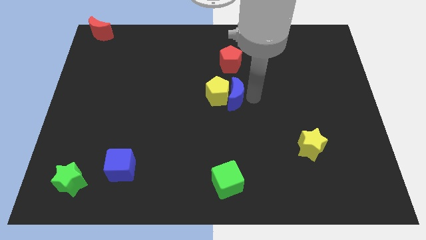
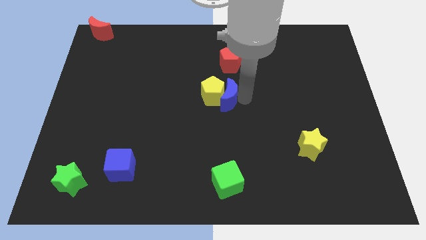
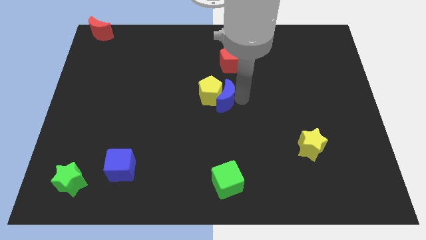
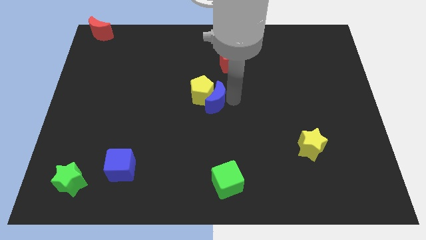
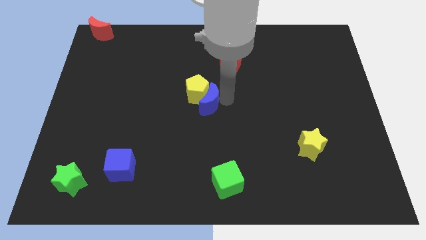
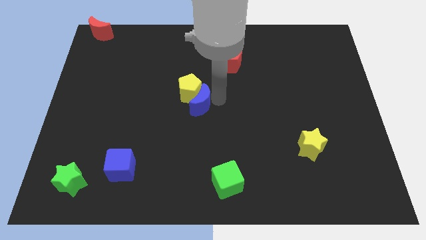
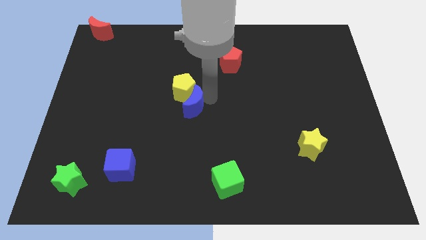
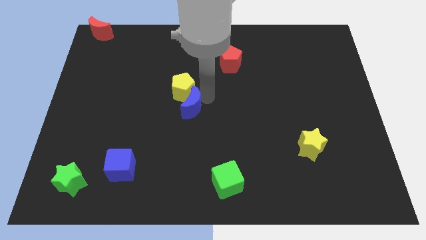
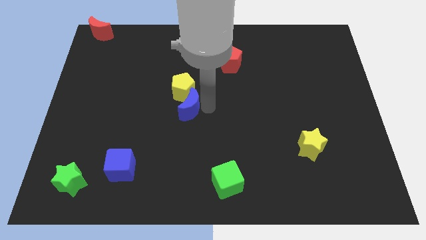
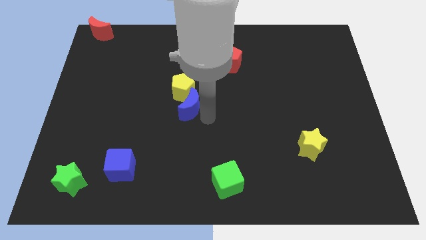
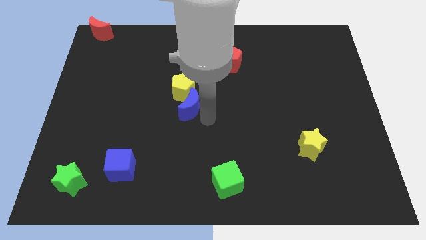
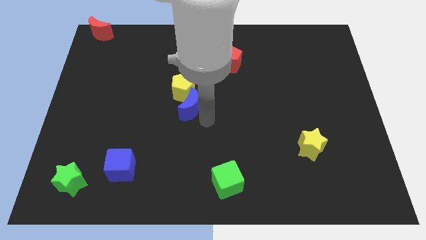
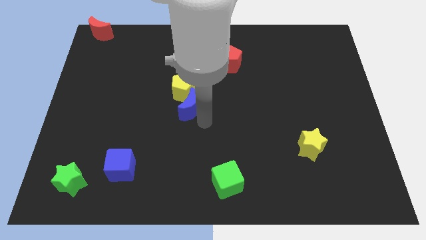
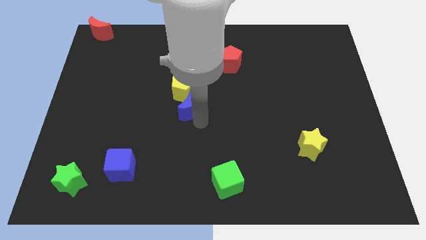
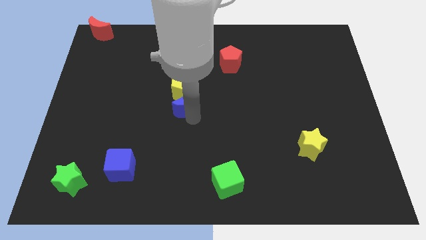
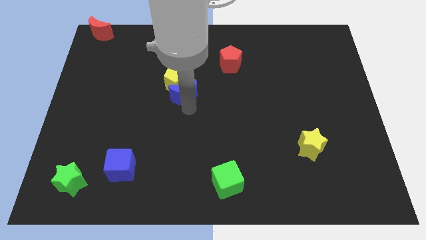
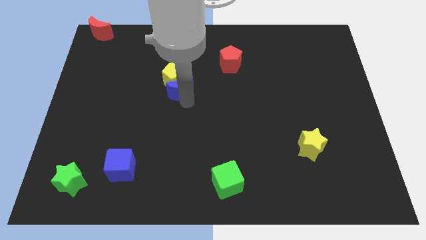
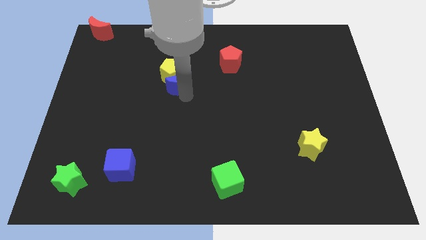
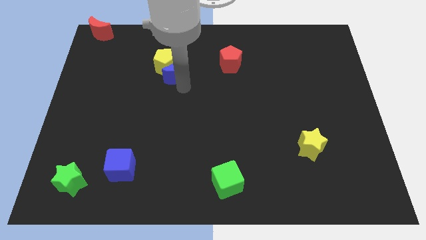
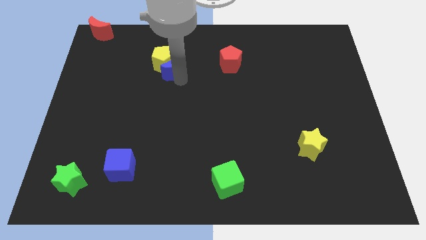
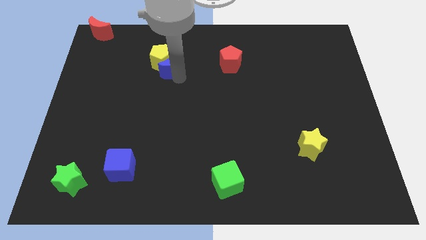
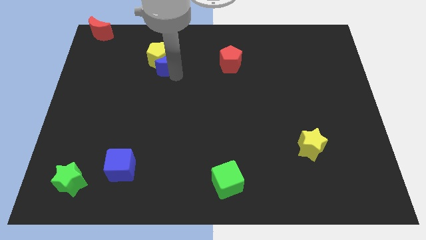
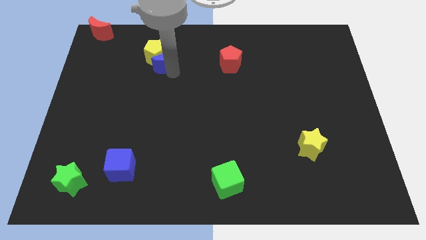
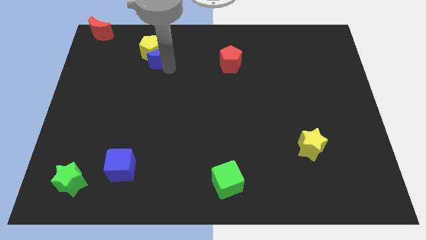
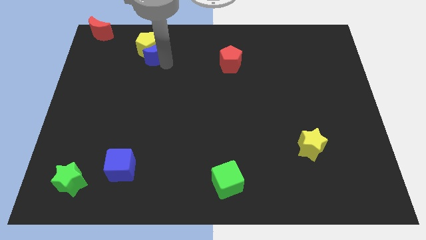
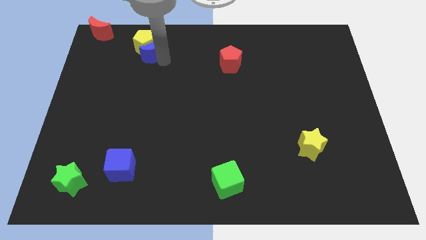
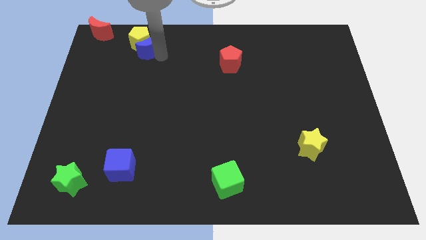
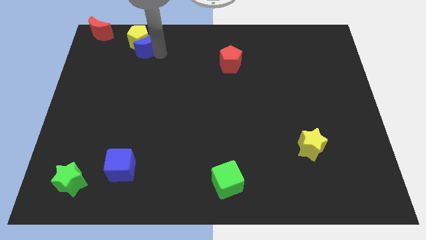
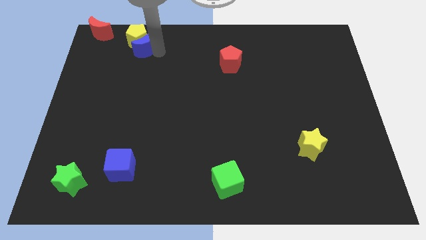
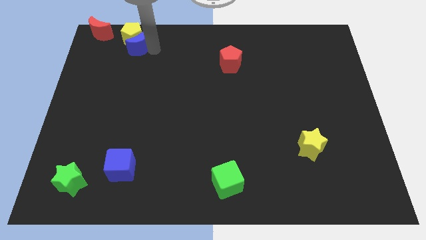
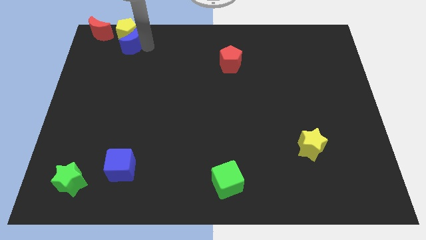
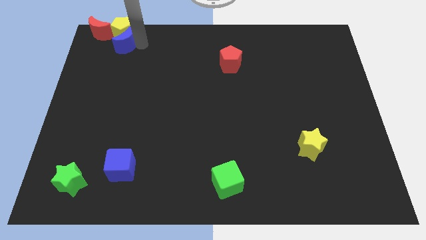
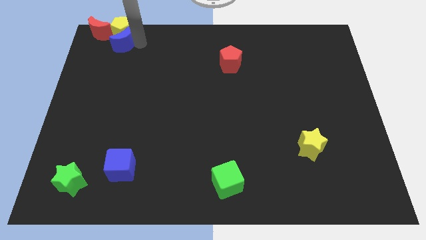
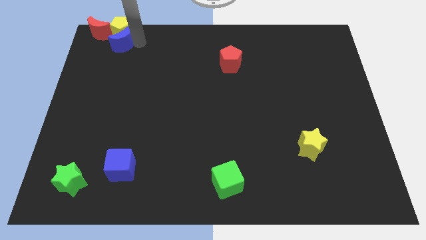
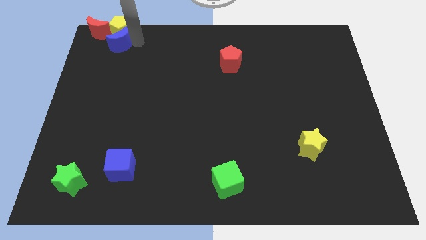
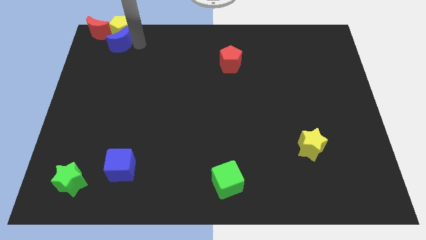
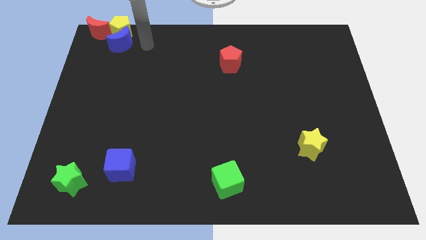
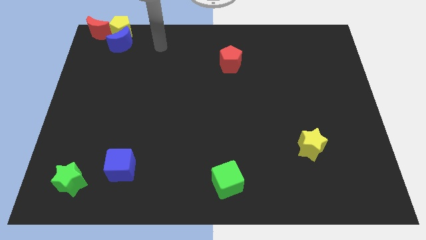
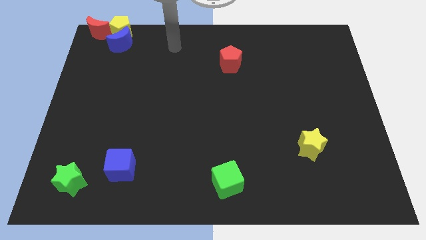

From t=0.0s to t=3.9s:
push the yellow pentagon and blue crescent into the red crescent

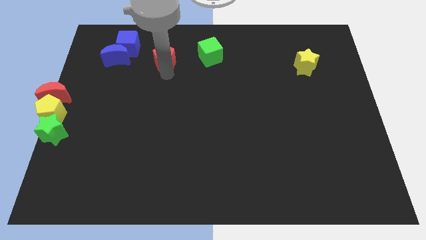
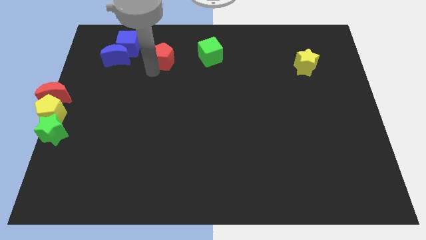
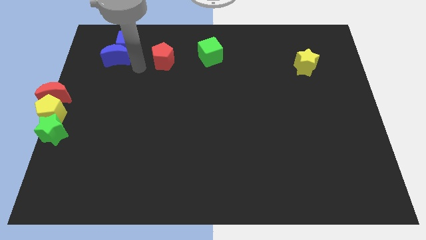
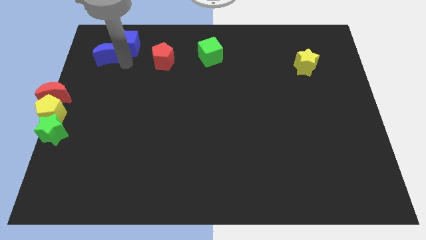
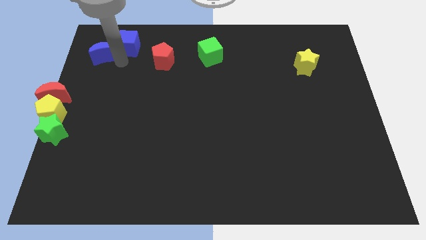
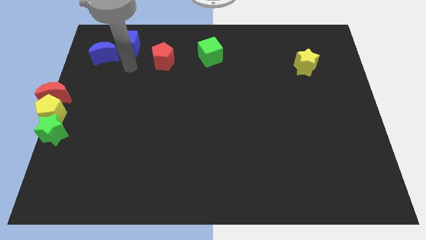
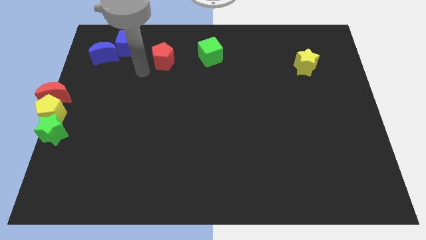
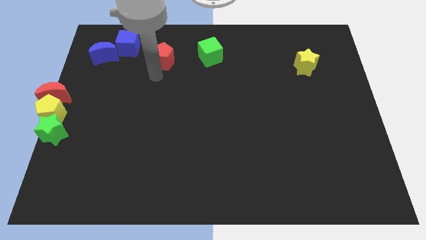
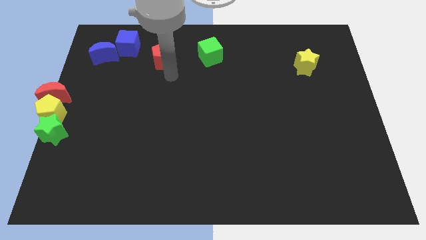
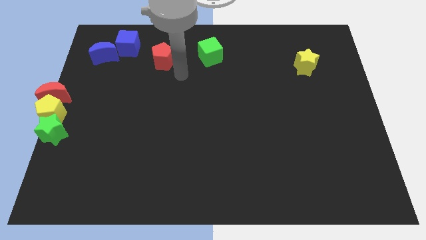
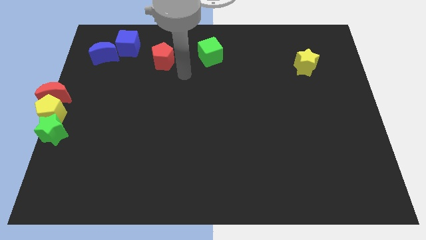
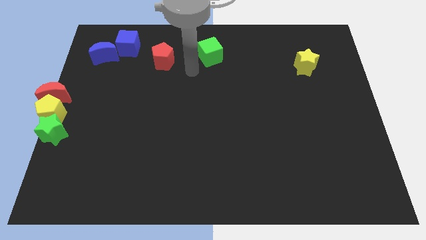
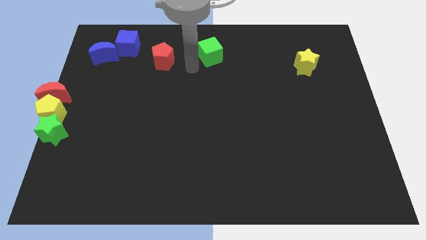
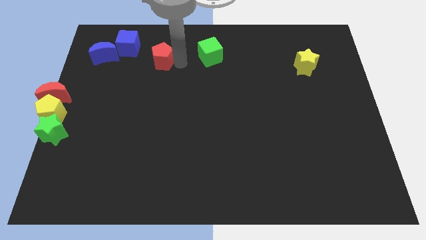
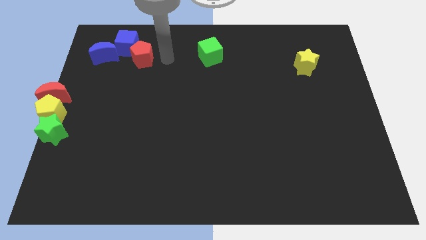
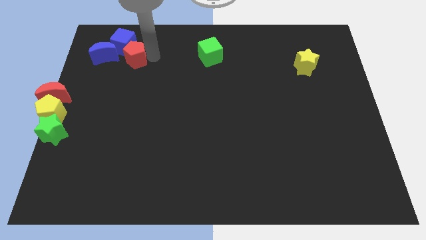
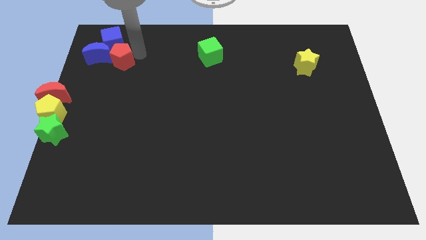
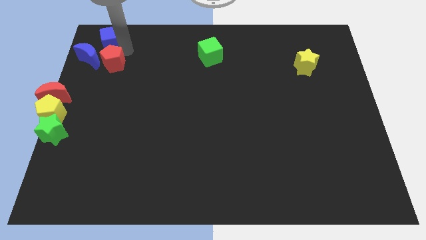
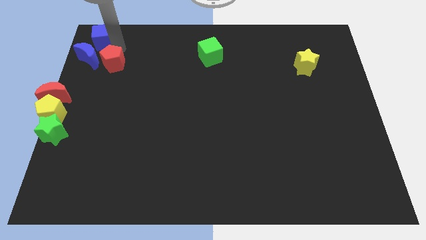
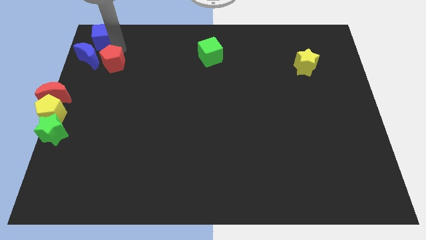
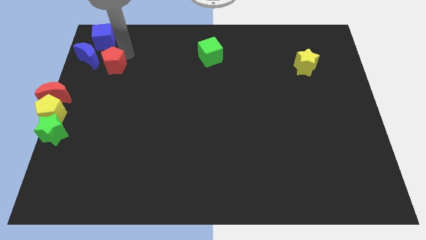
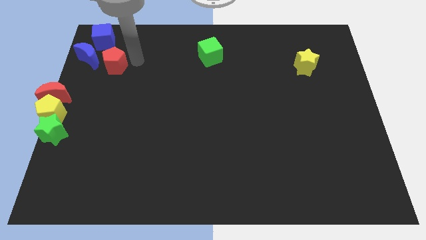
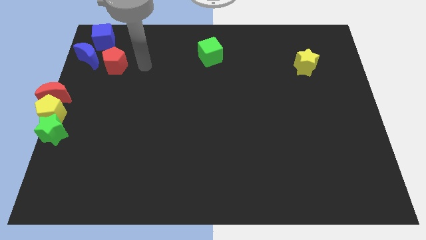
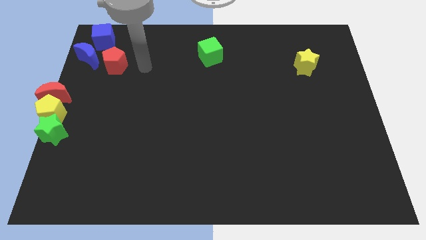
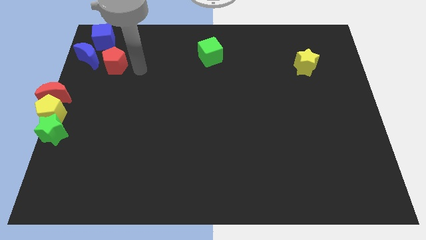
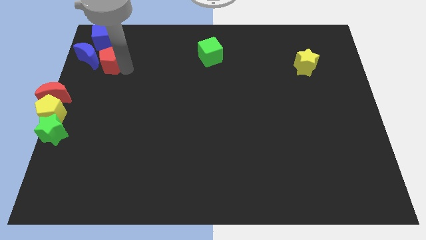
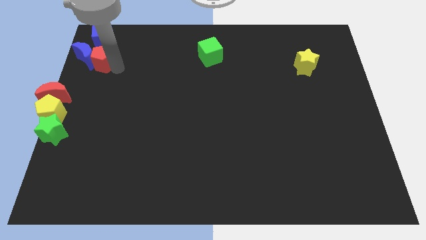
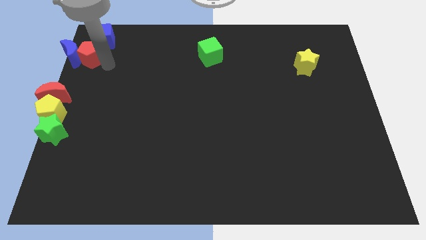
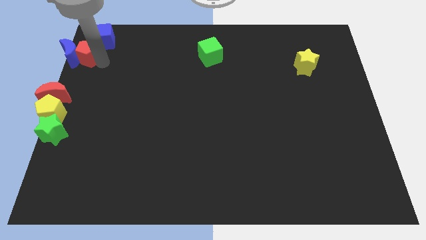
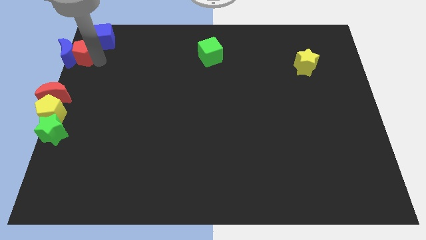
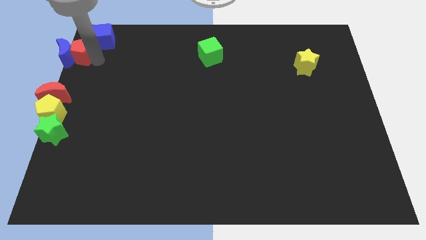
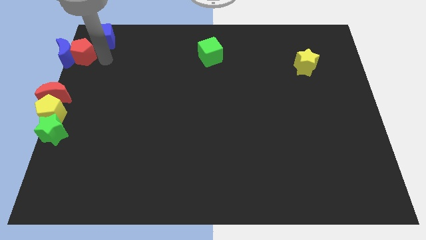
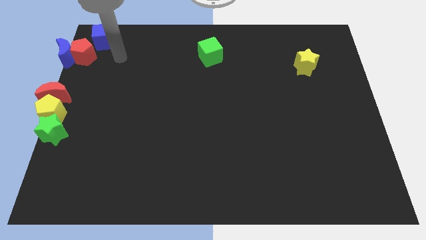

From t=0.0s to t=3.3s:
slide the red pentagon into the blue crescent

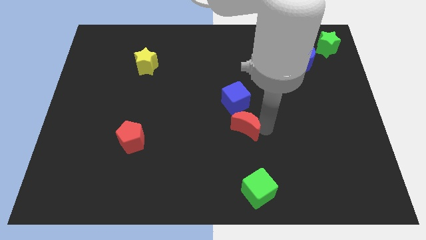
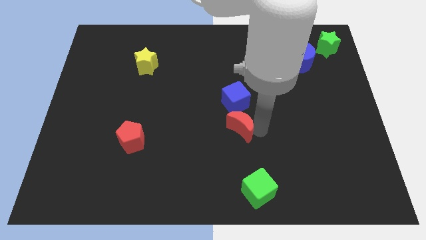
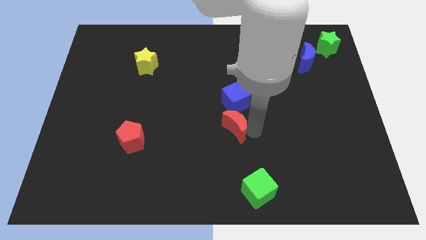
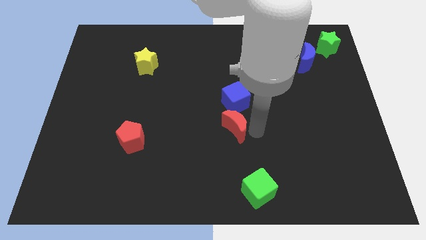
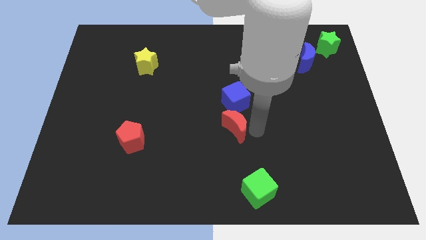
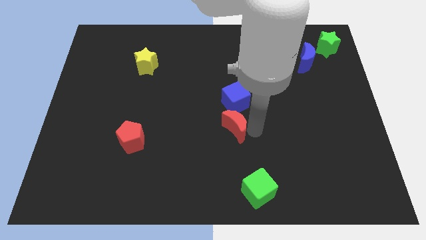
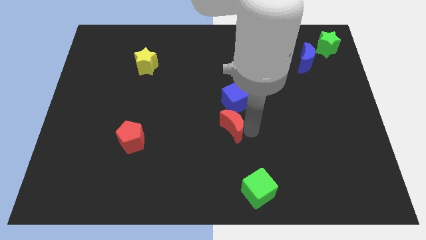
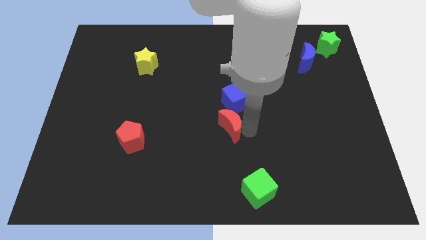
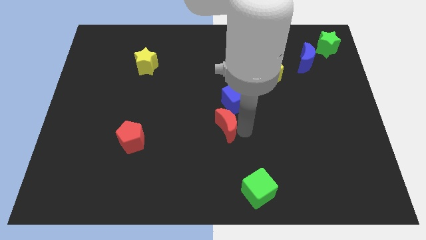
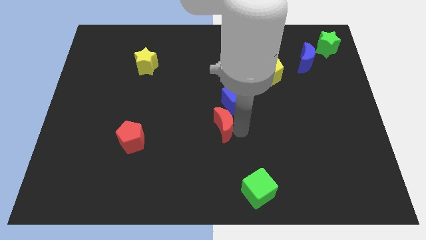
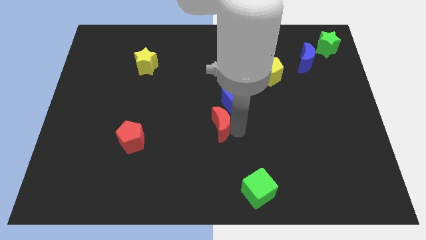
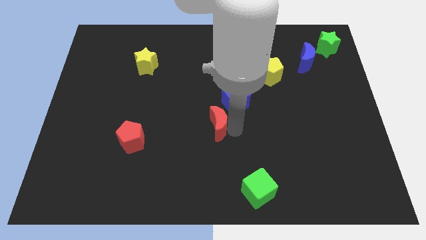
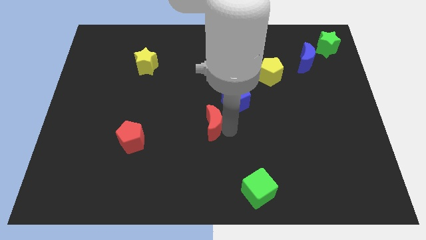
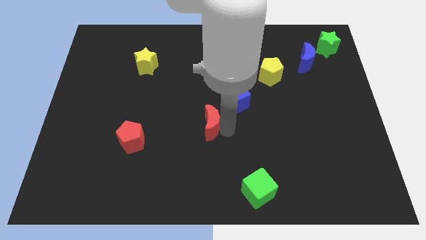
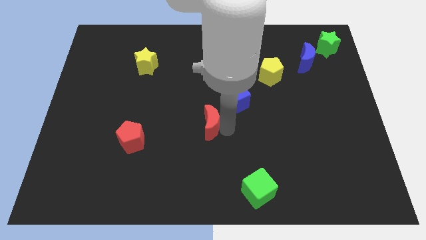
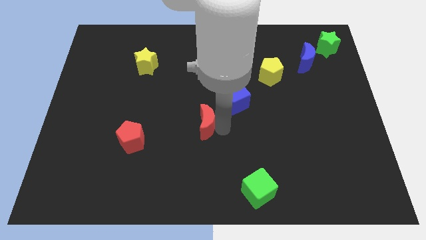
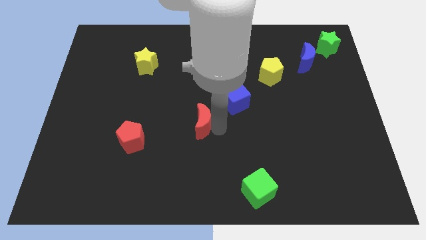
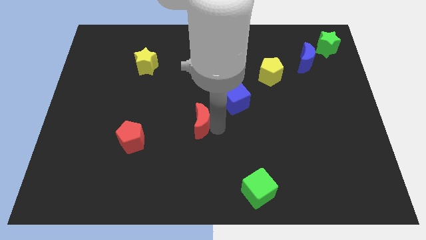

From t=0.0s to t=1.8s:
push the red crescent to the left of the board
